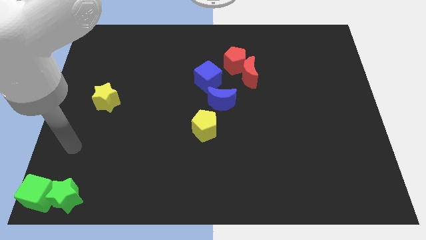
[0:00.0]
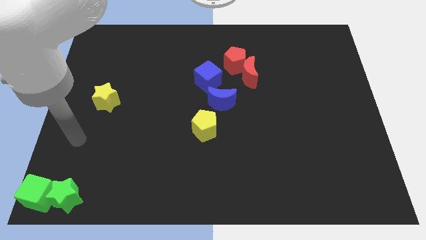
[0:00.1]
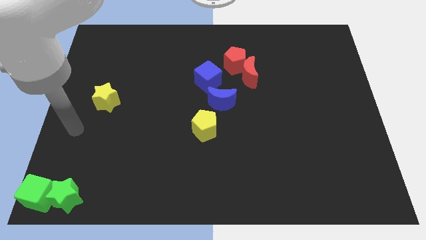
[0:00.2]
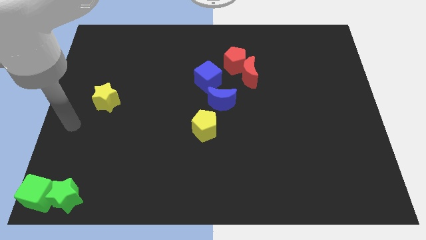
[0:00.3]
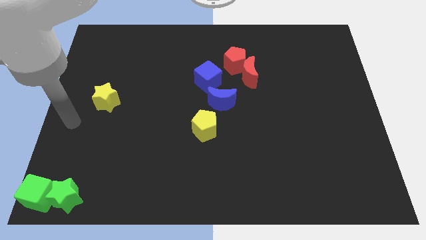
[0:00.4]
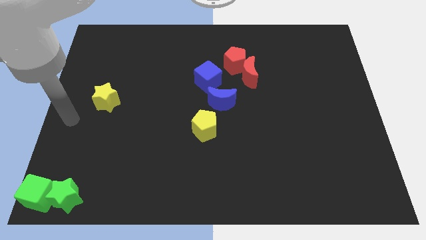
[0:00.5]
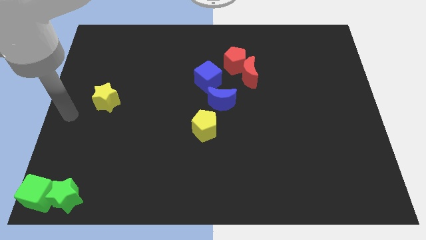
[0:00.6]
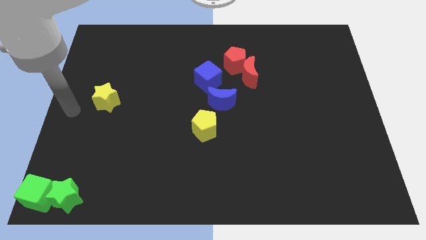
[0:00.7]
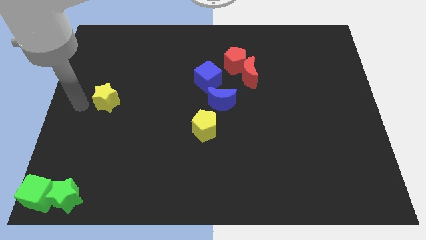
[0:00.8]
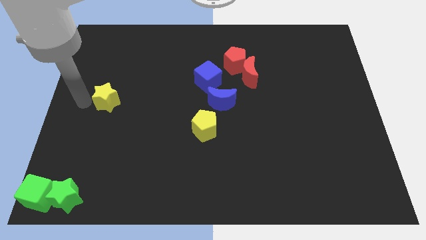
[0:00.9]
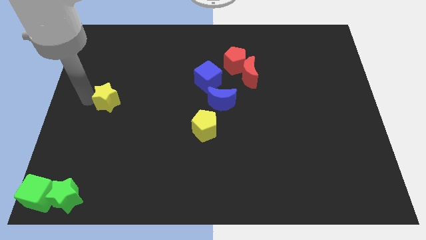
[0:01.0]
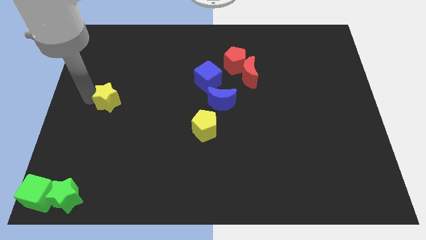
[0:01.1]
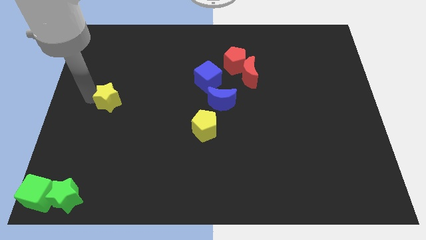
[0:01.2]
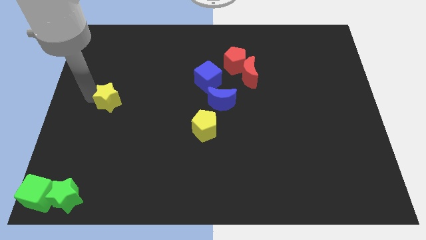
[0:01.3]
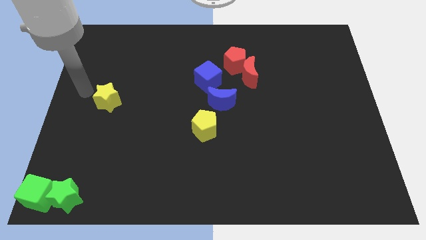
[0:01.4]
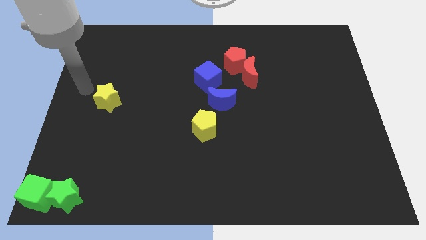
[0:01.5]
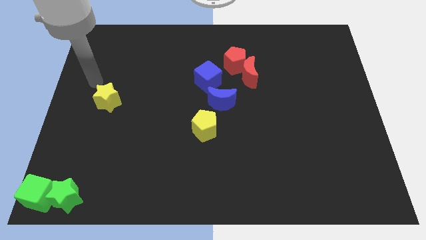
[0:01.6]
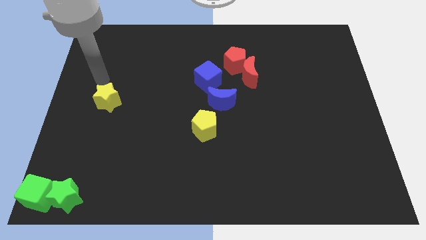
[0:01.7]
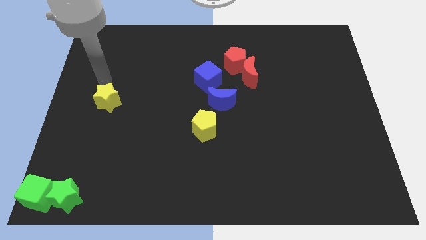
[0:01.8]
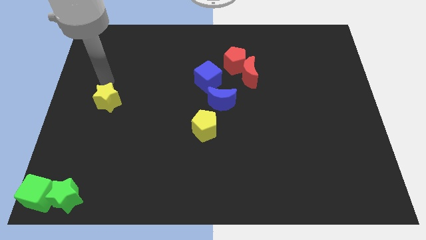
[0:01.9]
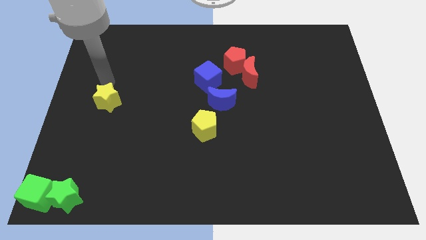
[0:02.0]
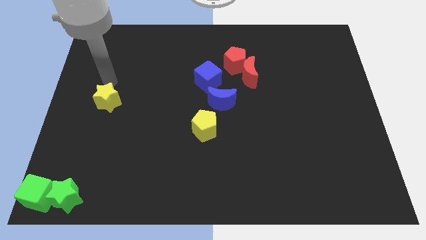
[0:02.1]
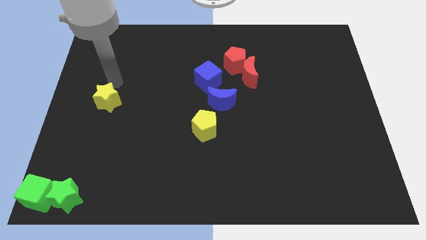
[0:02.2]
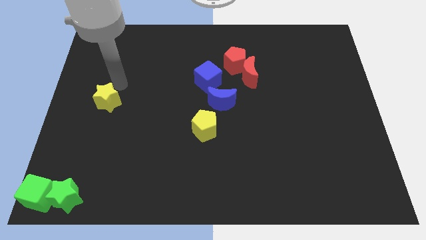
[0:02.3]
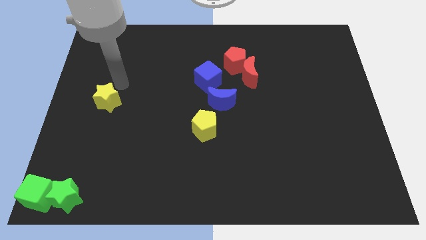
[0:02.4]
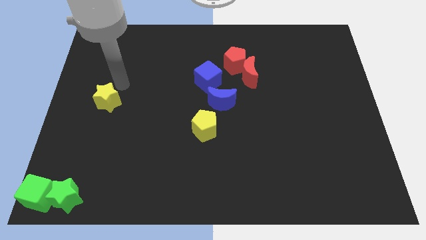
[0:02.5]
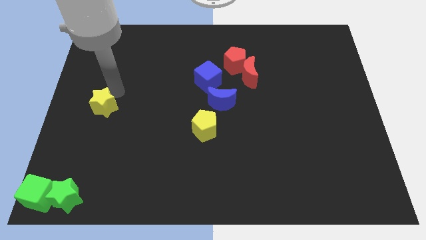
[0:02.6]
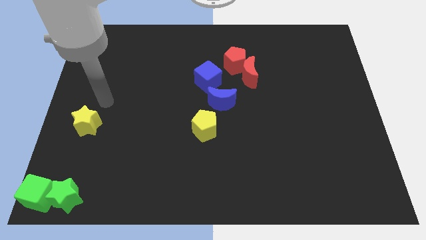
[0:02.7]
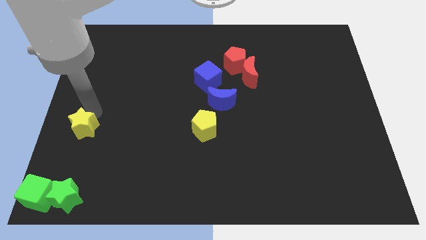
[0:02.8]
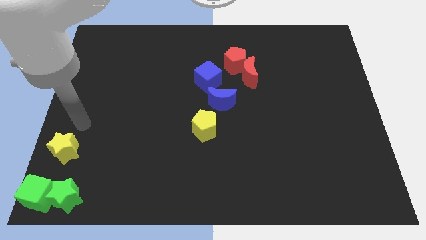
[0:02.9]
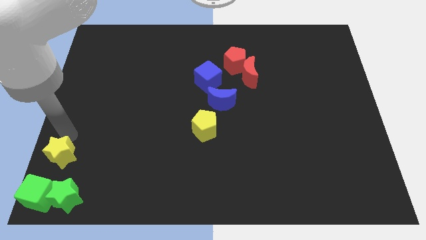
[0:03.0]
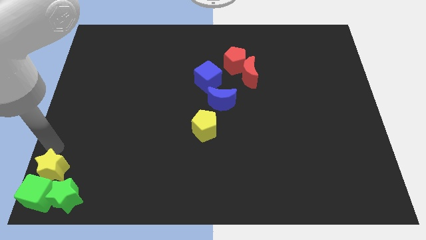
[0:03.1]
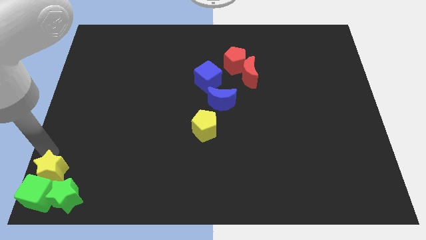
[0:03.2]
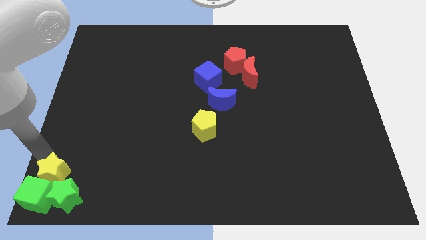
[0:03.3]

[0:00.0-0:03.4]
place the yellow star at the top of the green cube

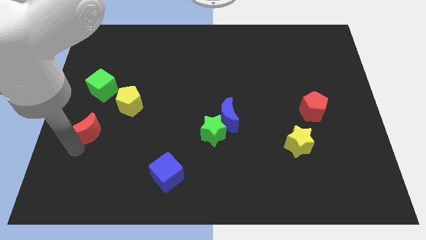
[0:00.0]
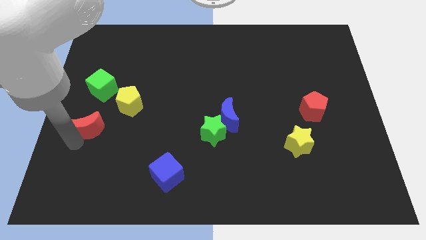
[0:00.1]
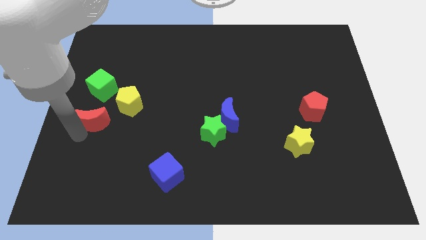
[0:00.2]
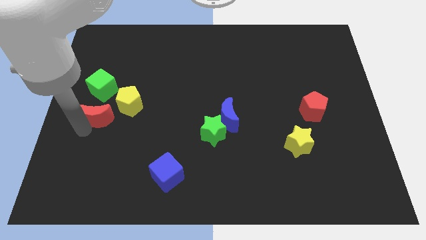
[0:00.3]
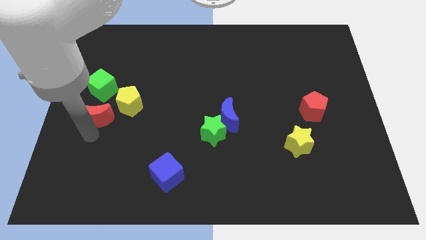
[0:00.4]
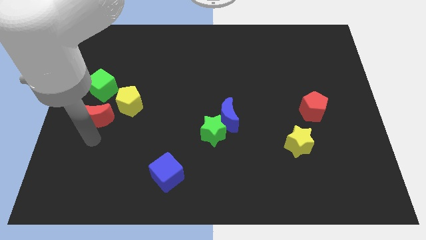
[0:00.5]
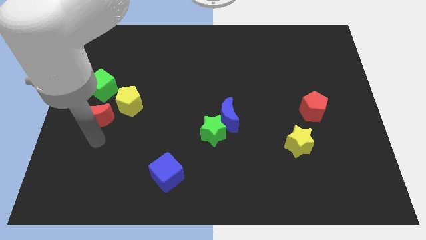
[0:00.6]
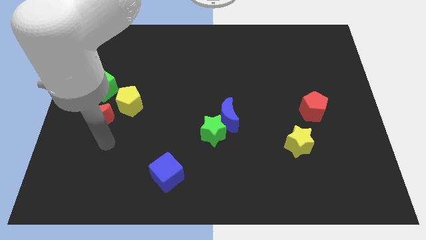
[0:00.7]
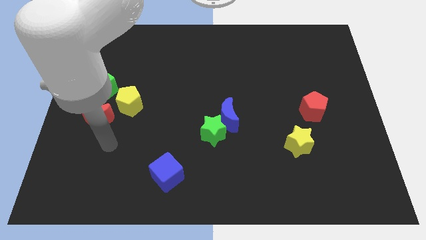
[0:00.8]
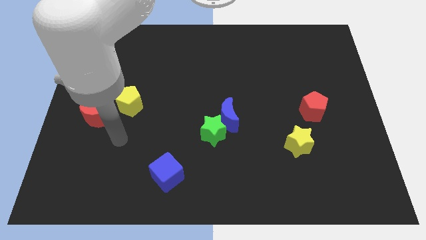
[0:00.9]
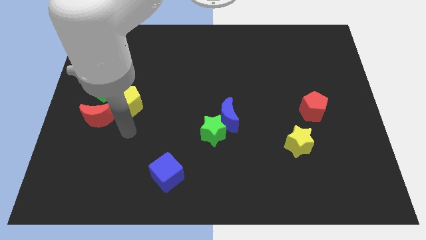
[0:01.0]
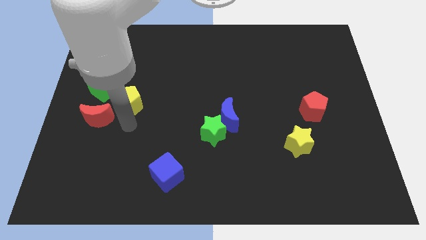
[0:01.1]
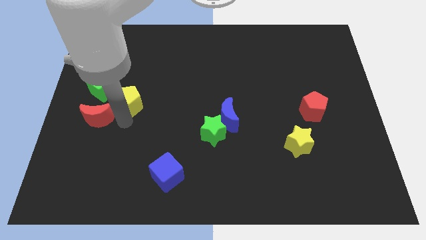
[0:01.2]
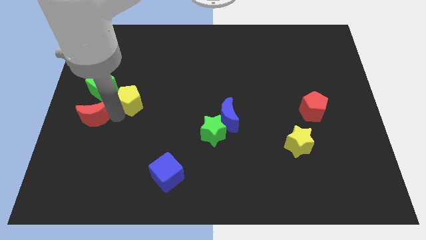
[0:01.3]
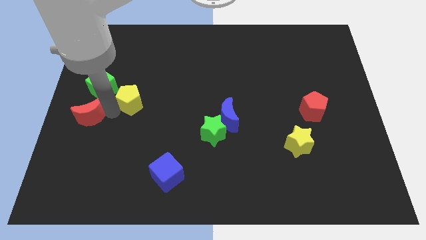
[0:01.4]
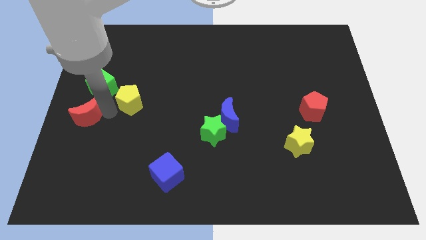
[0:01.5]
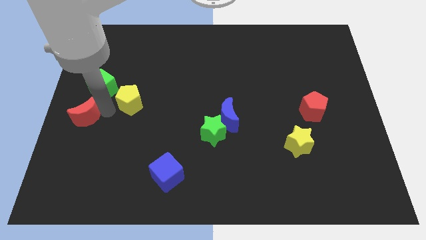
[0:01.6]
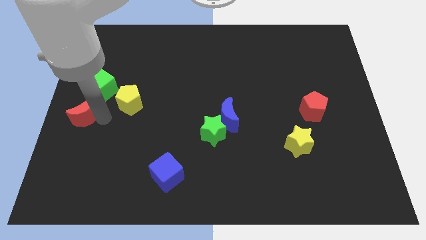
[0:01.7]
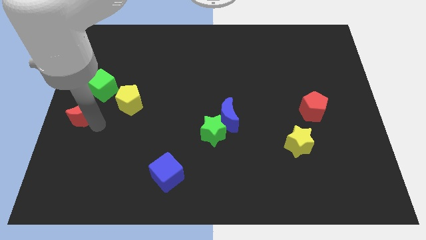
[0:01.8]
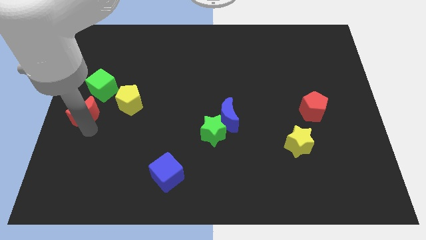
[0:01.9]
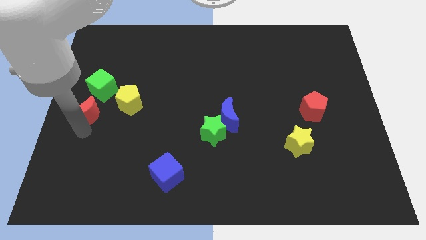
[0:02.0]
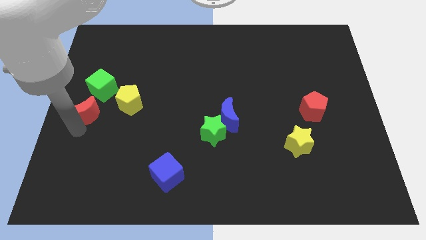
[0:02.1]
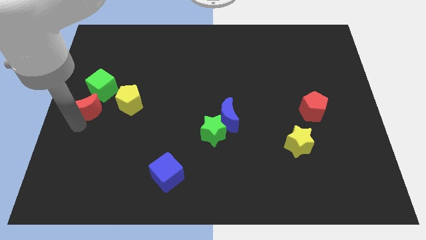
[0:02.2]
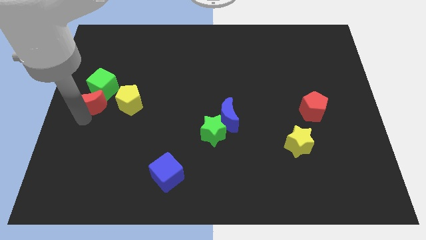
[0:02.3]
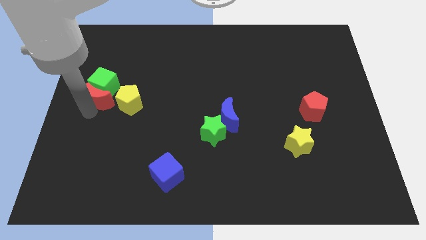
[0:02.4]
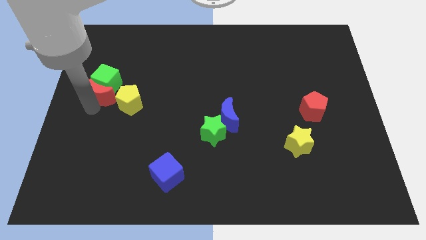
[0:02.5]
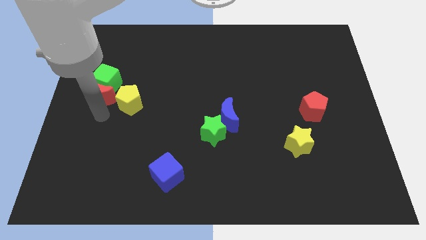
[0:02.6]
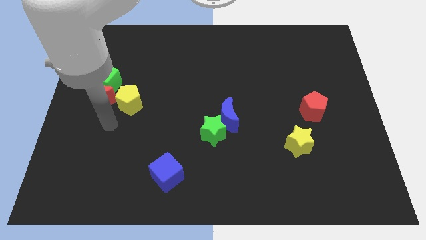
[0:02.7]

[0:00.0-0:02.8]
push the red crescent into the green cube

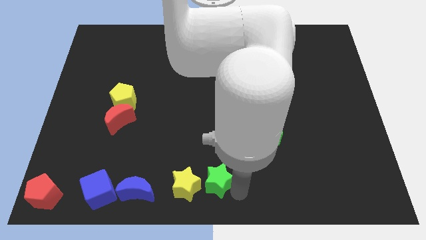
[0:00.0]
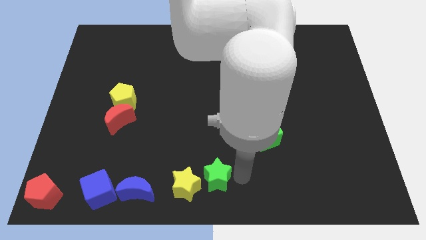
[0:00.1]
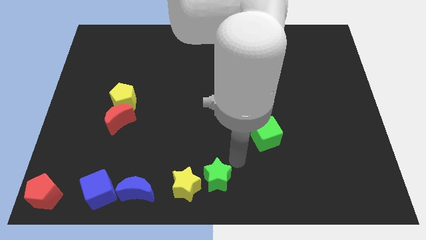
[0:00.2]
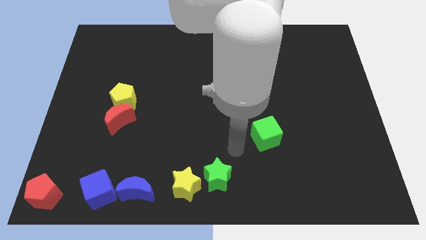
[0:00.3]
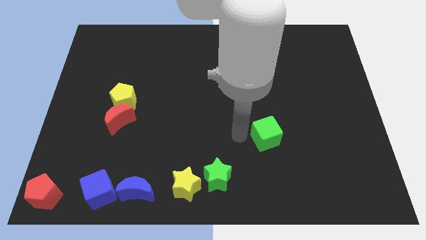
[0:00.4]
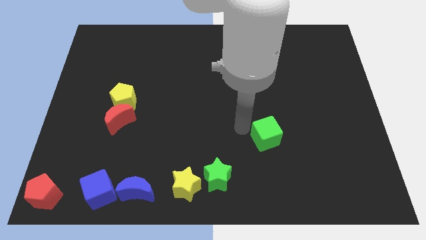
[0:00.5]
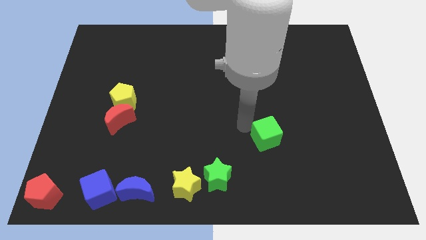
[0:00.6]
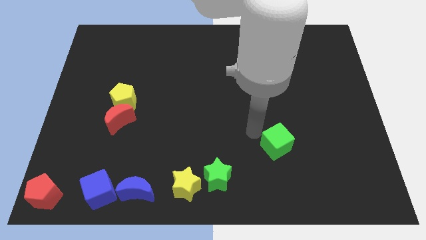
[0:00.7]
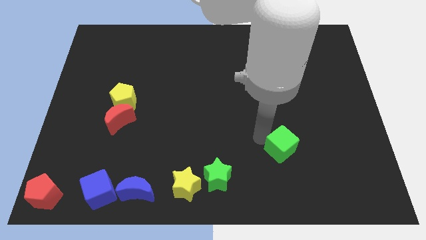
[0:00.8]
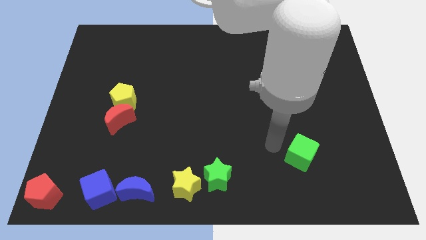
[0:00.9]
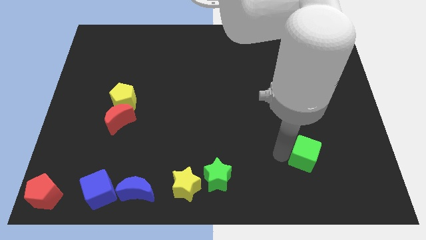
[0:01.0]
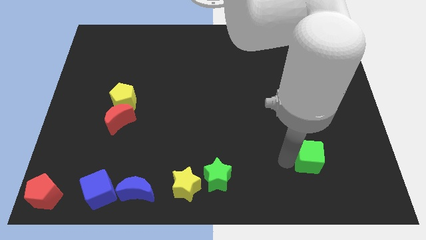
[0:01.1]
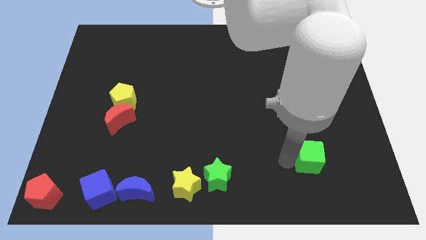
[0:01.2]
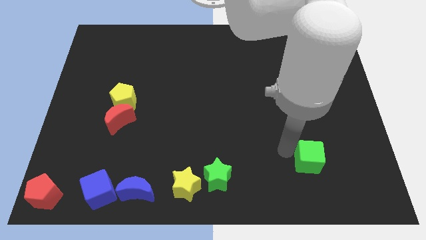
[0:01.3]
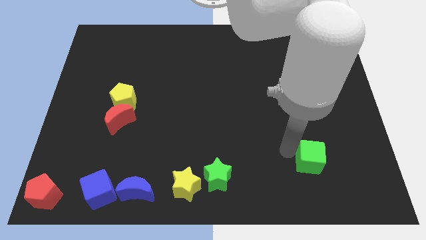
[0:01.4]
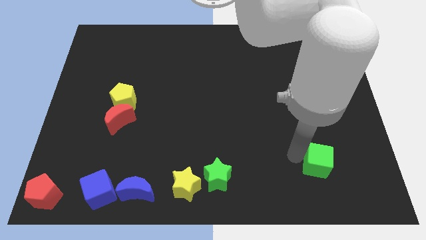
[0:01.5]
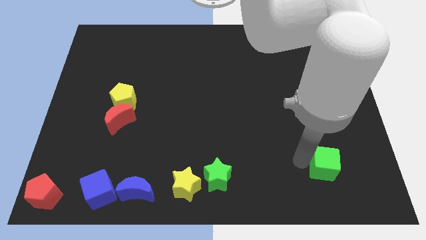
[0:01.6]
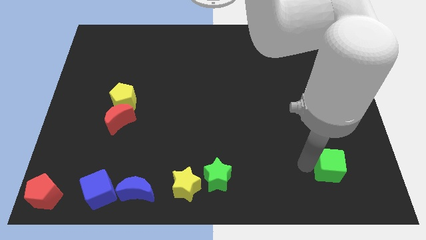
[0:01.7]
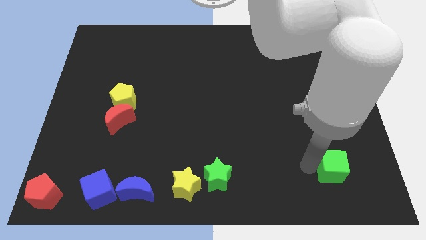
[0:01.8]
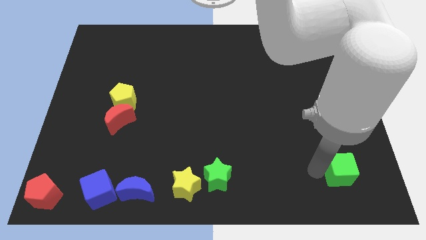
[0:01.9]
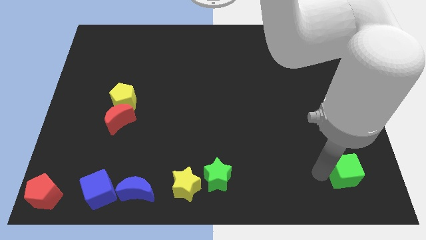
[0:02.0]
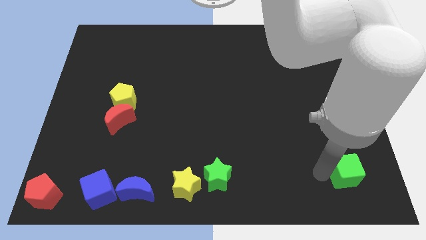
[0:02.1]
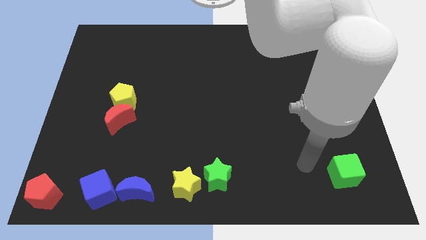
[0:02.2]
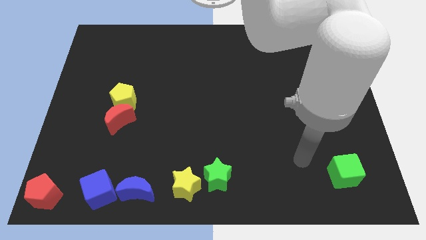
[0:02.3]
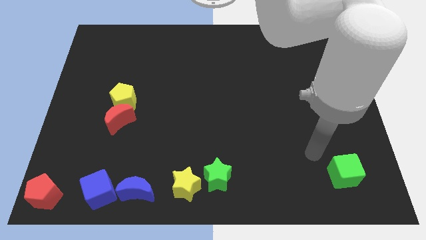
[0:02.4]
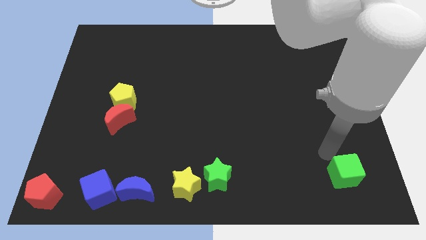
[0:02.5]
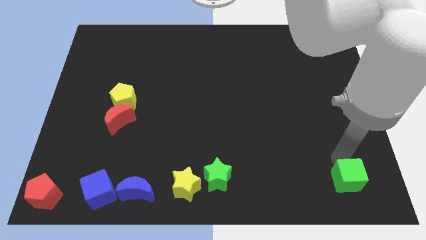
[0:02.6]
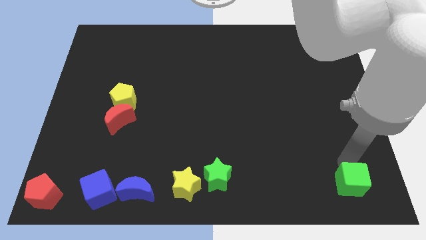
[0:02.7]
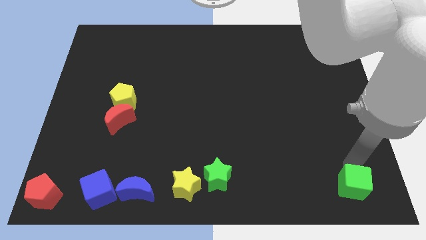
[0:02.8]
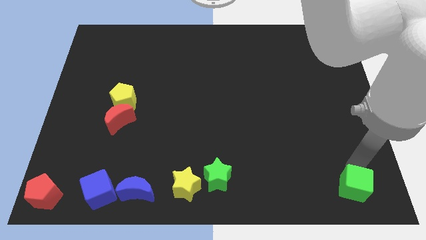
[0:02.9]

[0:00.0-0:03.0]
put the green cube parallel to the green star
